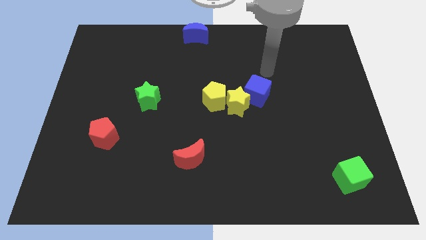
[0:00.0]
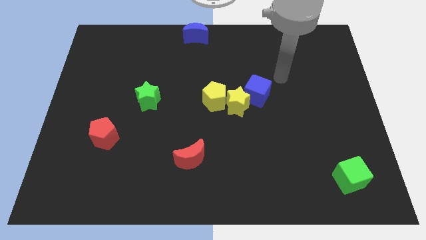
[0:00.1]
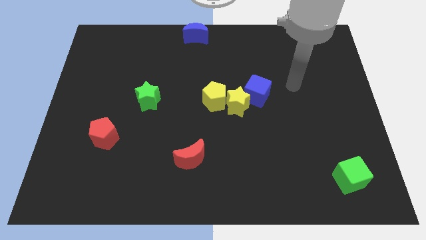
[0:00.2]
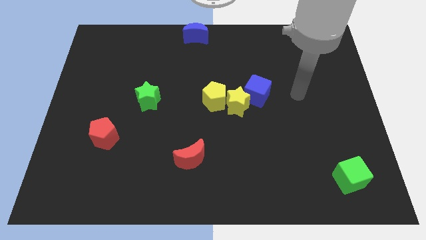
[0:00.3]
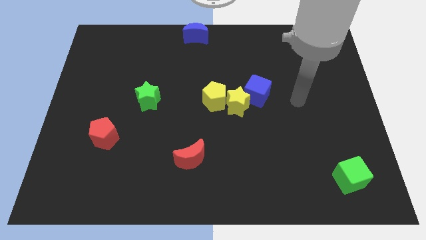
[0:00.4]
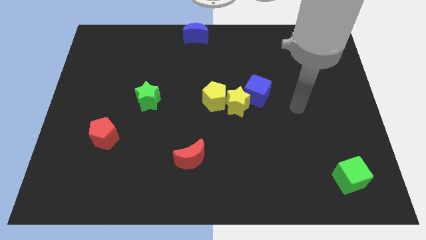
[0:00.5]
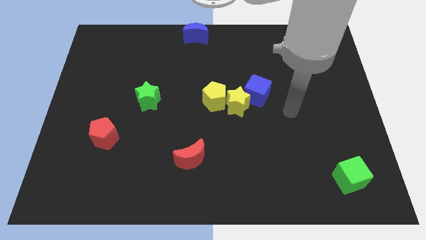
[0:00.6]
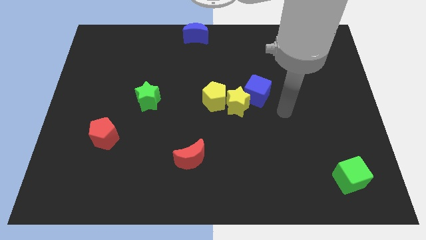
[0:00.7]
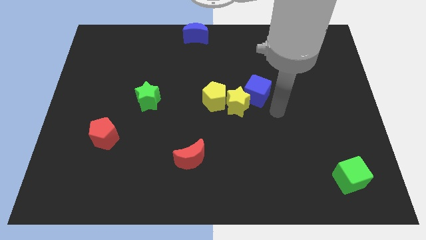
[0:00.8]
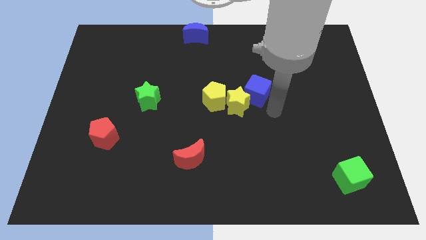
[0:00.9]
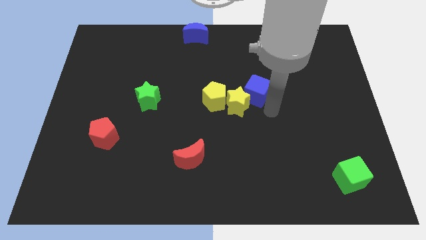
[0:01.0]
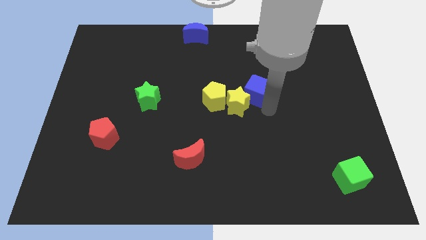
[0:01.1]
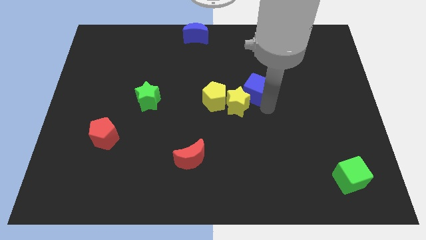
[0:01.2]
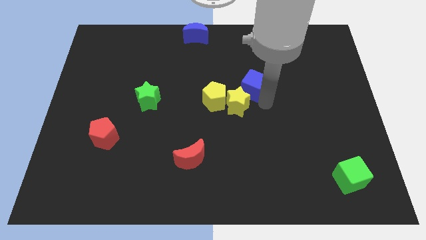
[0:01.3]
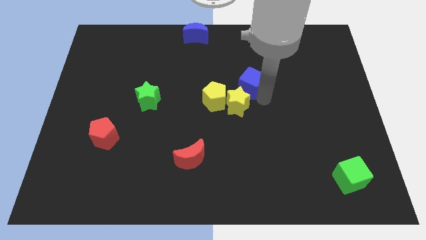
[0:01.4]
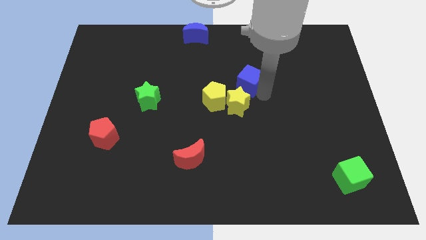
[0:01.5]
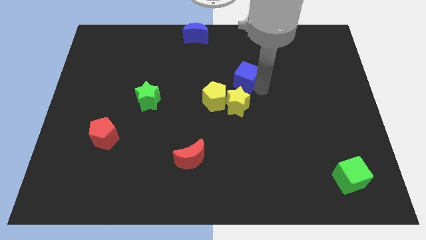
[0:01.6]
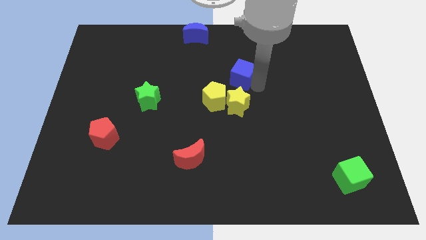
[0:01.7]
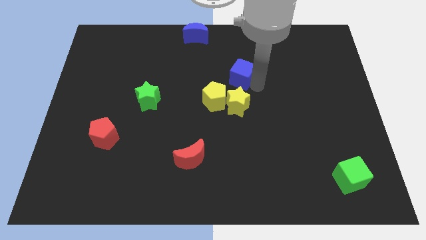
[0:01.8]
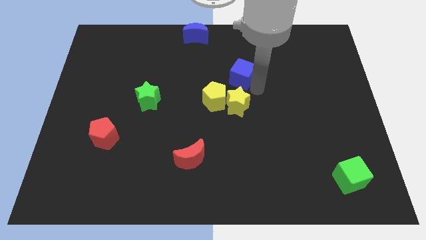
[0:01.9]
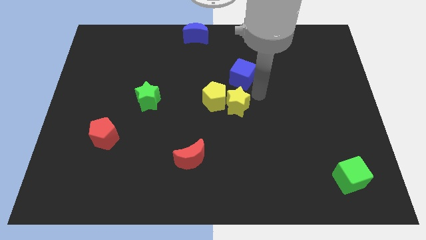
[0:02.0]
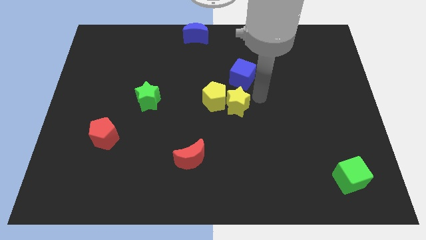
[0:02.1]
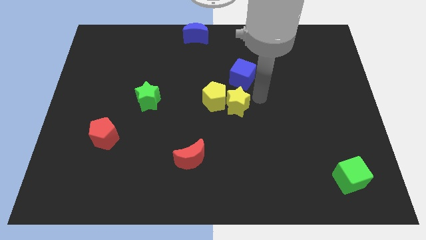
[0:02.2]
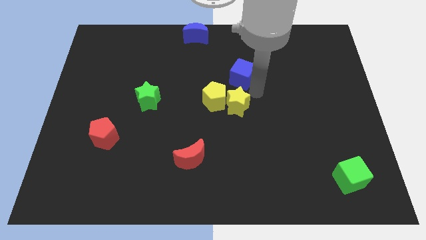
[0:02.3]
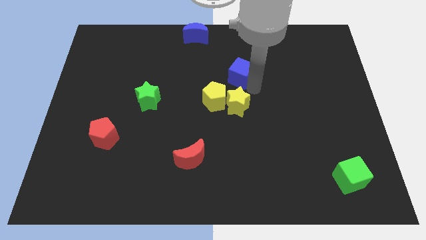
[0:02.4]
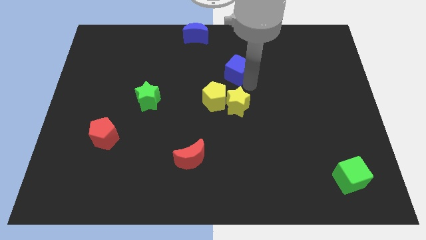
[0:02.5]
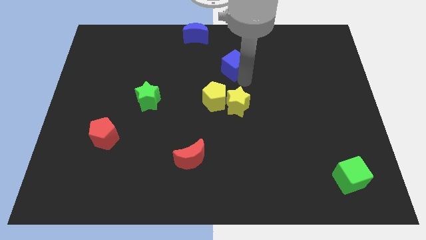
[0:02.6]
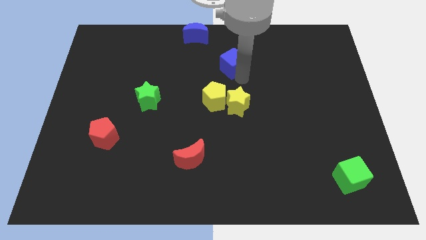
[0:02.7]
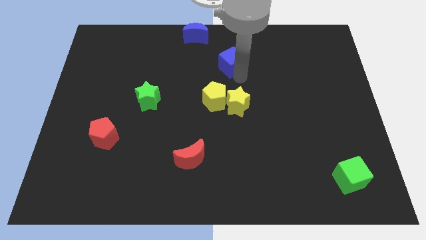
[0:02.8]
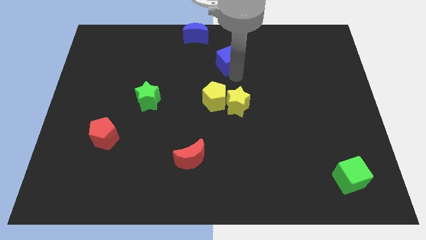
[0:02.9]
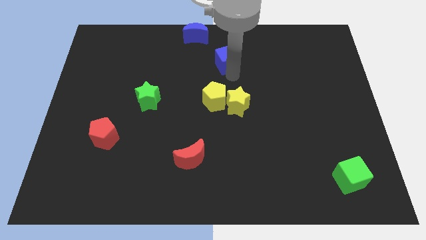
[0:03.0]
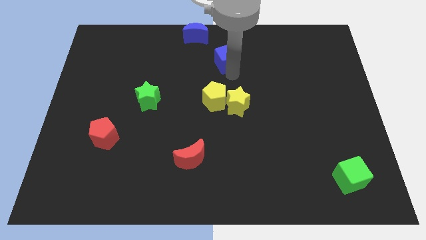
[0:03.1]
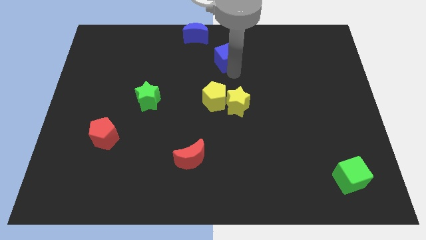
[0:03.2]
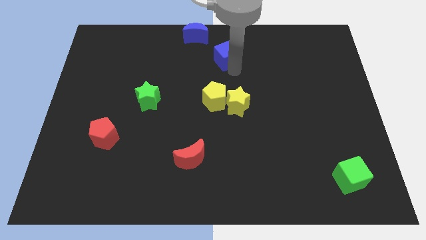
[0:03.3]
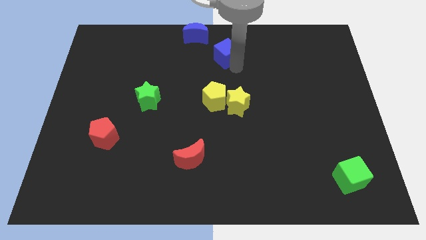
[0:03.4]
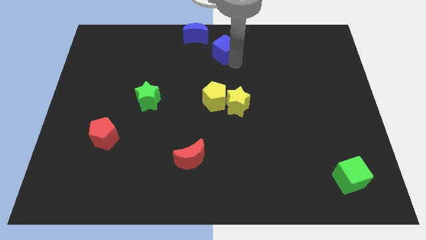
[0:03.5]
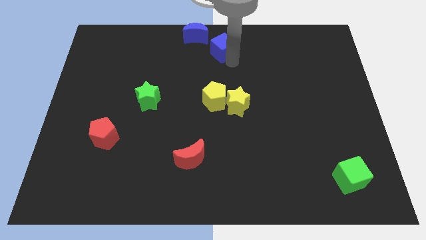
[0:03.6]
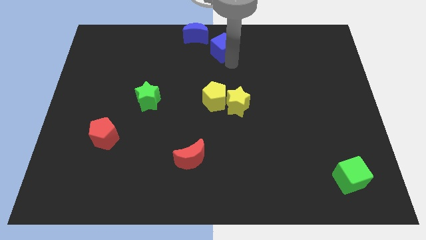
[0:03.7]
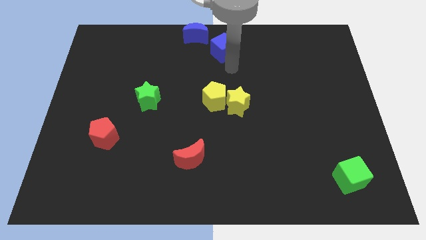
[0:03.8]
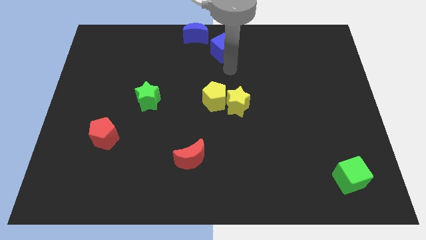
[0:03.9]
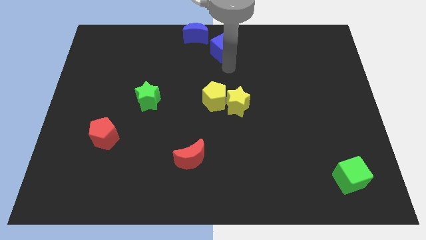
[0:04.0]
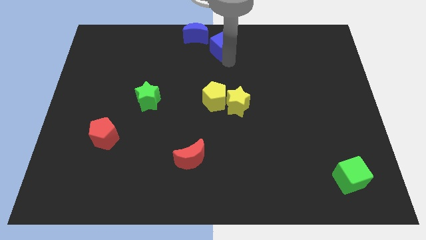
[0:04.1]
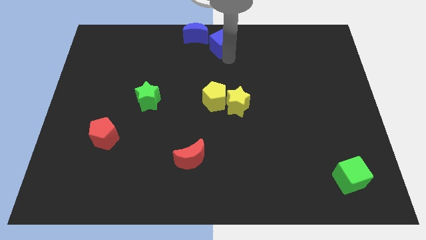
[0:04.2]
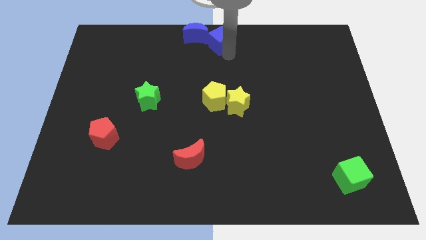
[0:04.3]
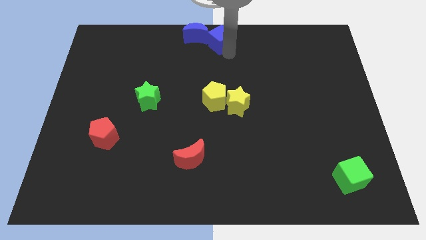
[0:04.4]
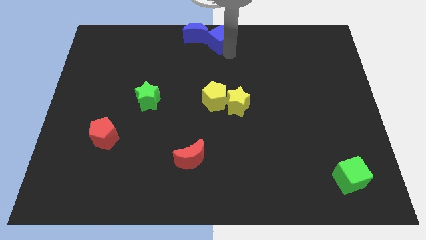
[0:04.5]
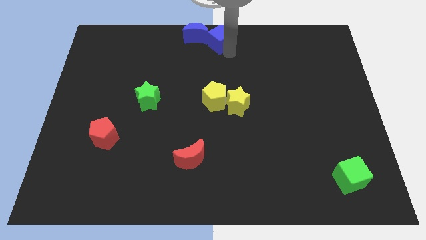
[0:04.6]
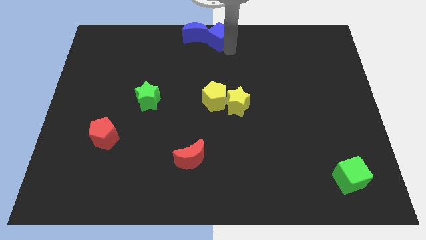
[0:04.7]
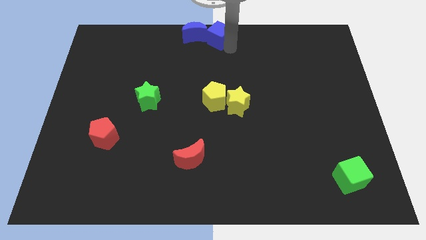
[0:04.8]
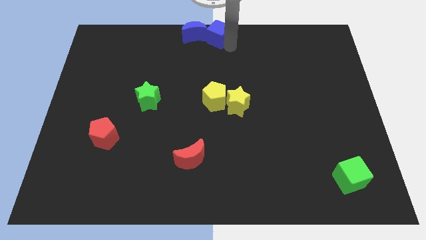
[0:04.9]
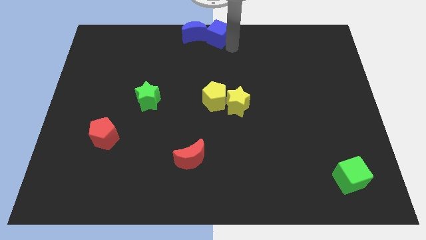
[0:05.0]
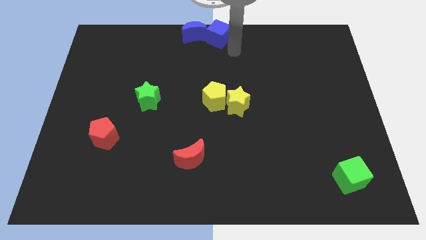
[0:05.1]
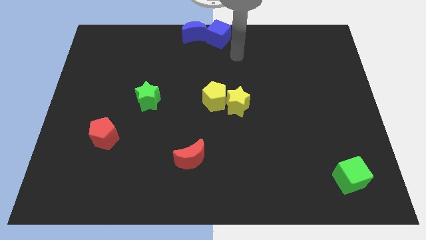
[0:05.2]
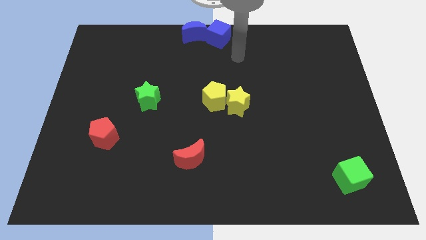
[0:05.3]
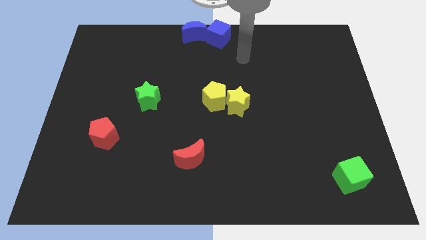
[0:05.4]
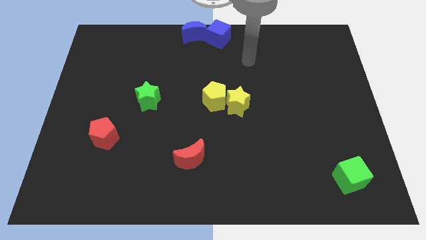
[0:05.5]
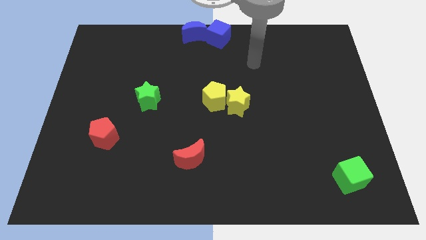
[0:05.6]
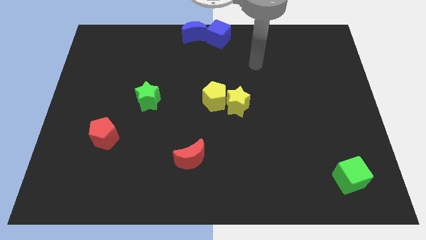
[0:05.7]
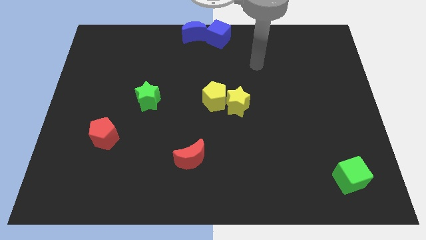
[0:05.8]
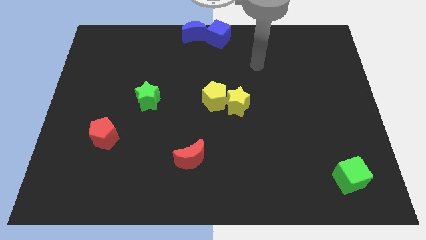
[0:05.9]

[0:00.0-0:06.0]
place the blue cube to the right side of the blue moon

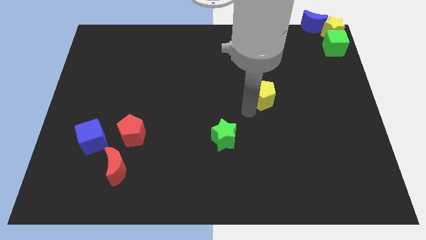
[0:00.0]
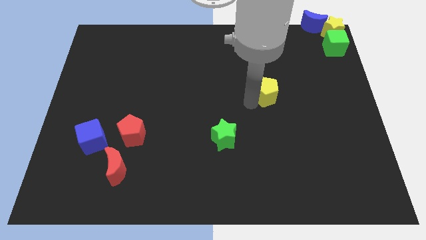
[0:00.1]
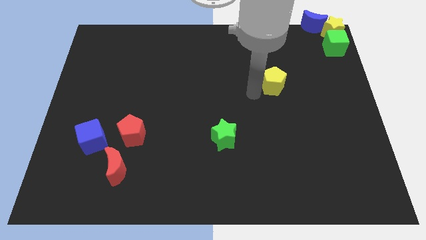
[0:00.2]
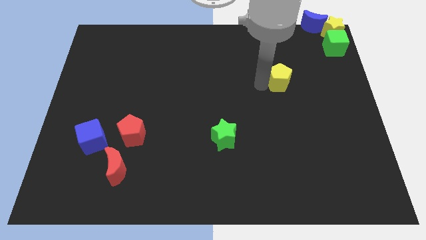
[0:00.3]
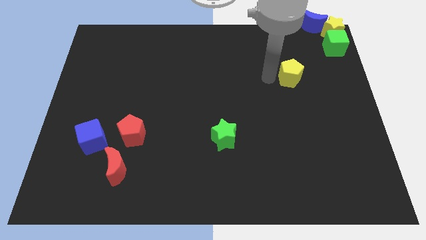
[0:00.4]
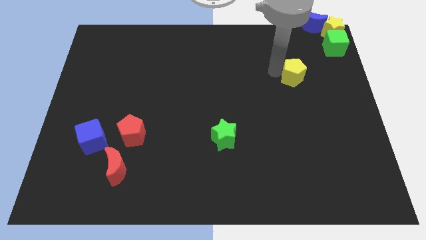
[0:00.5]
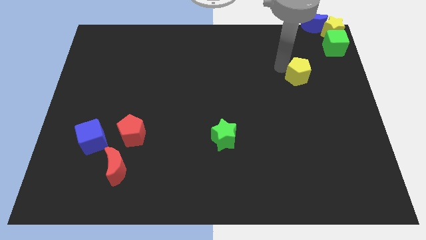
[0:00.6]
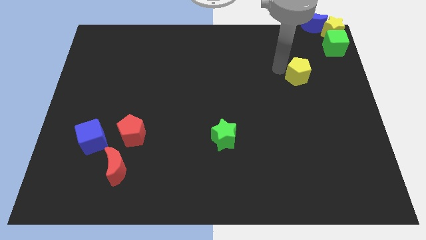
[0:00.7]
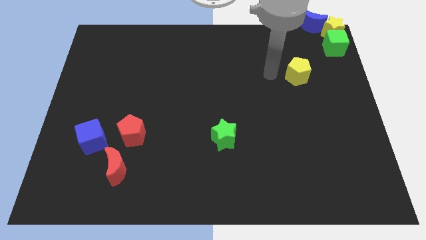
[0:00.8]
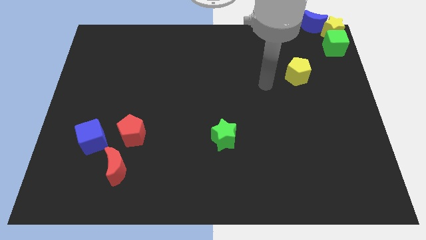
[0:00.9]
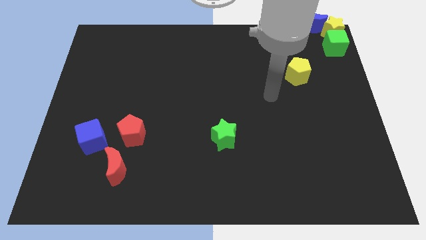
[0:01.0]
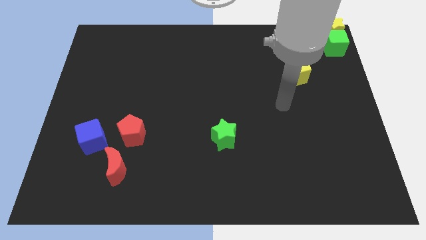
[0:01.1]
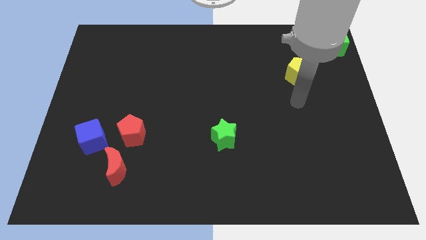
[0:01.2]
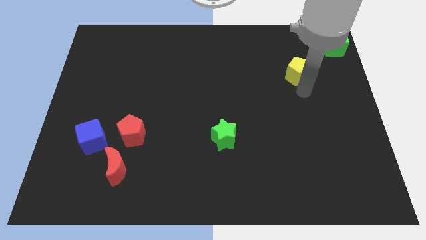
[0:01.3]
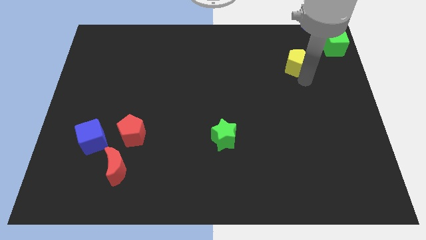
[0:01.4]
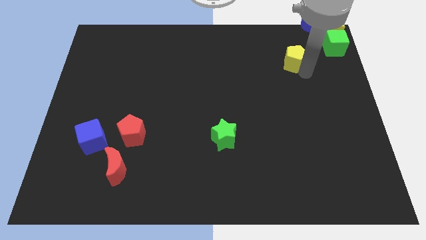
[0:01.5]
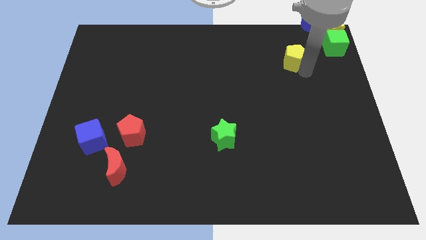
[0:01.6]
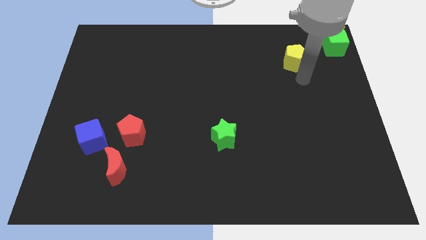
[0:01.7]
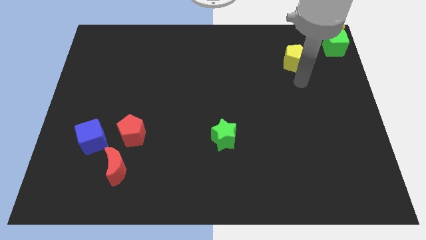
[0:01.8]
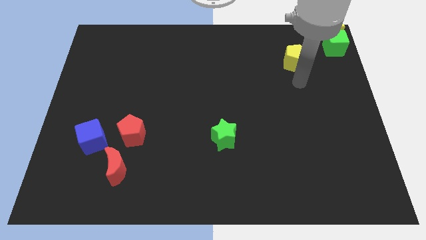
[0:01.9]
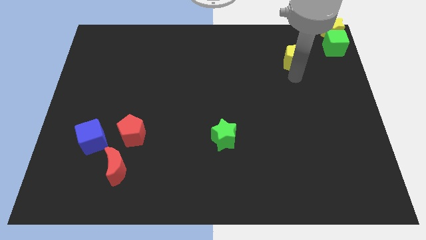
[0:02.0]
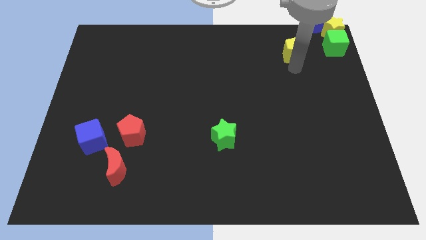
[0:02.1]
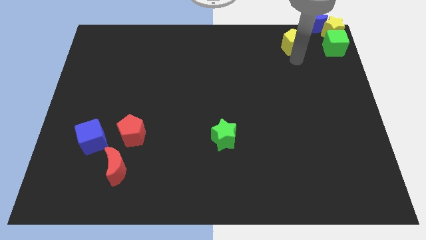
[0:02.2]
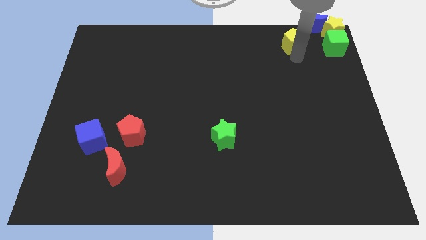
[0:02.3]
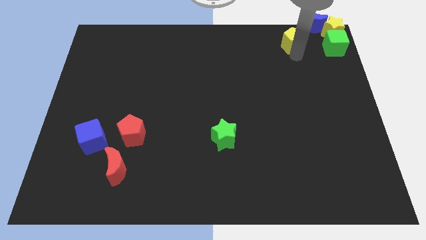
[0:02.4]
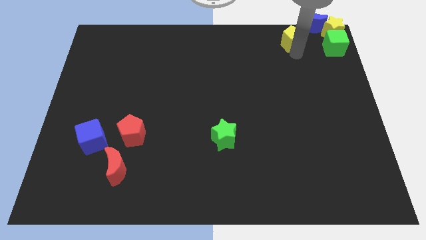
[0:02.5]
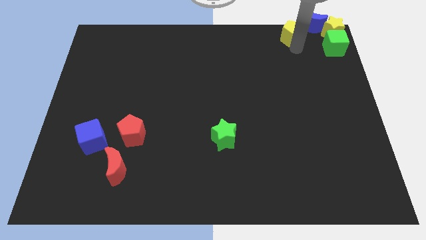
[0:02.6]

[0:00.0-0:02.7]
move yellow pentagon left beside the green cube

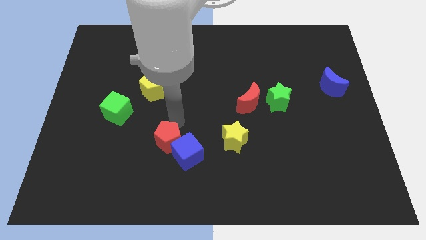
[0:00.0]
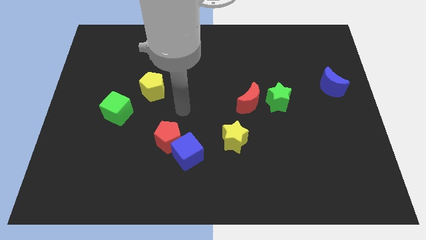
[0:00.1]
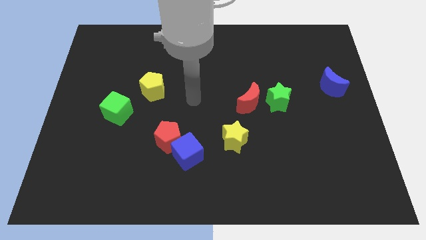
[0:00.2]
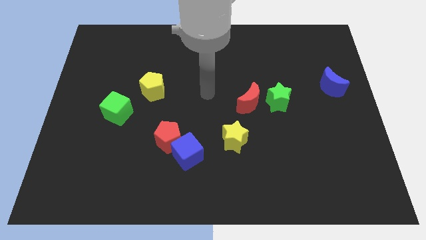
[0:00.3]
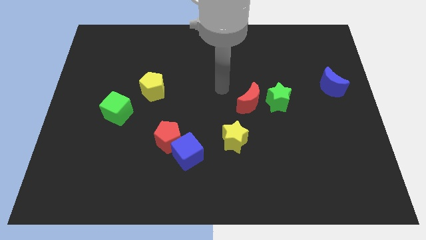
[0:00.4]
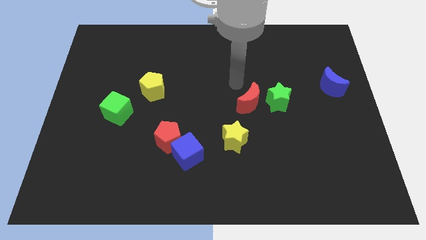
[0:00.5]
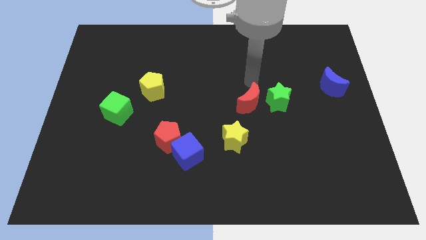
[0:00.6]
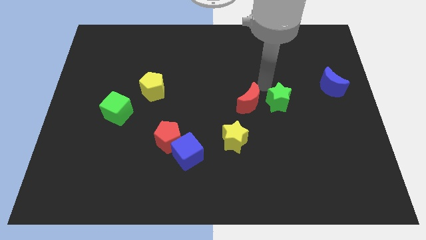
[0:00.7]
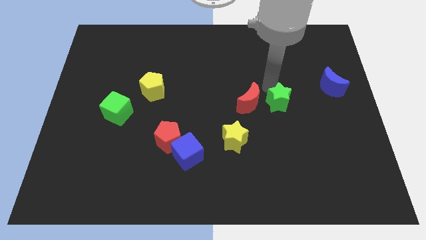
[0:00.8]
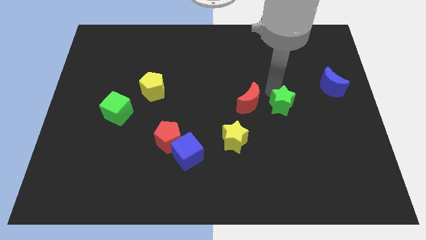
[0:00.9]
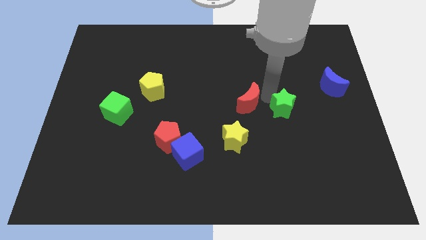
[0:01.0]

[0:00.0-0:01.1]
move your arm to the top of the green star
